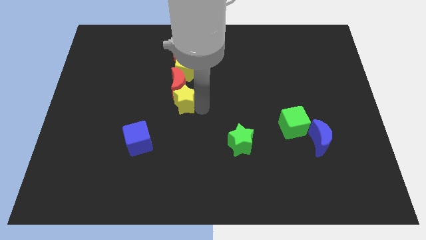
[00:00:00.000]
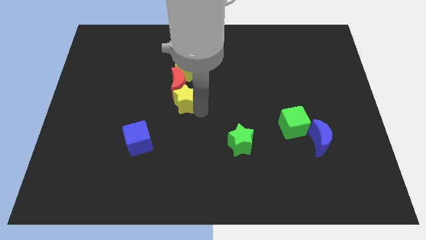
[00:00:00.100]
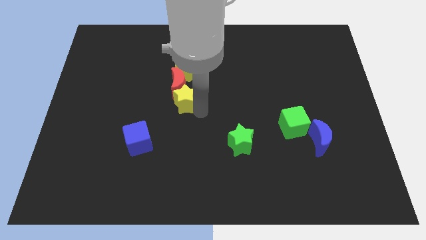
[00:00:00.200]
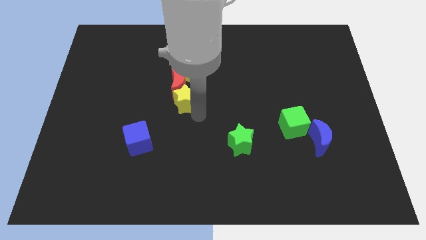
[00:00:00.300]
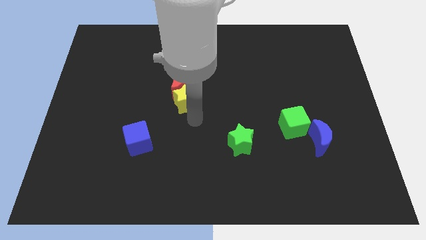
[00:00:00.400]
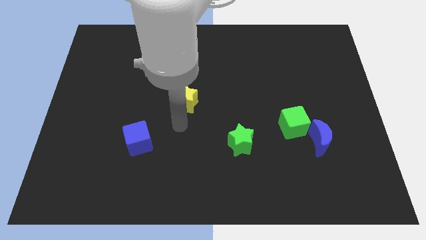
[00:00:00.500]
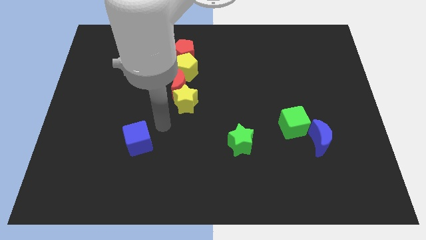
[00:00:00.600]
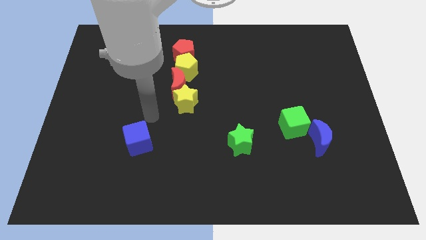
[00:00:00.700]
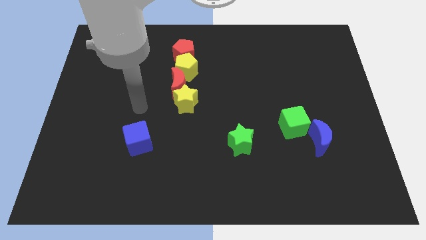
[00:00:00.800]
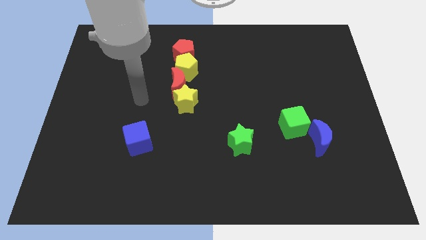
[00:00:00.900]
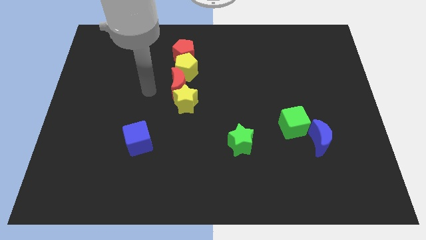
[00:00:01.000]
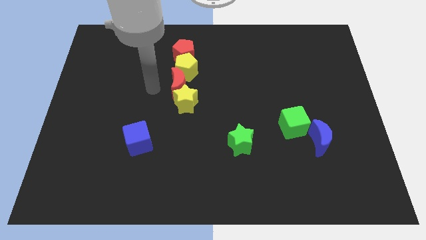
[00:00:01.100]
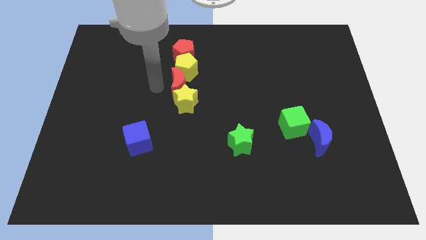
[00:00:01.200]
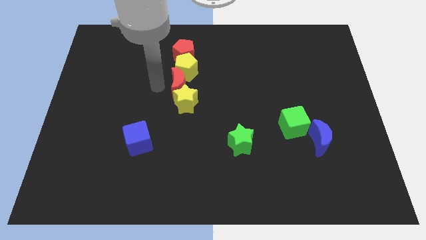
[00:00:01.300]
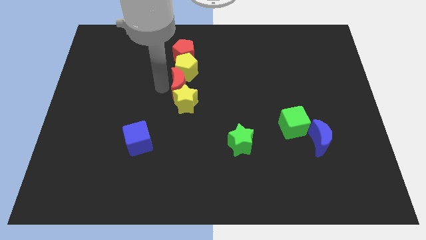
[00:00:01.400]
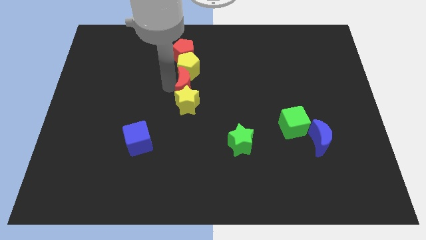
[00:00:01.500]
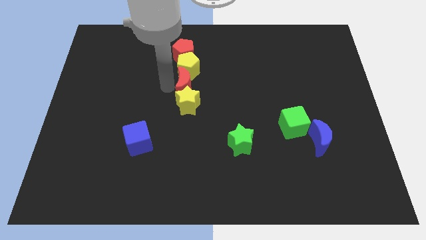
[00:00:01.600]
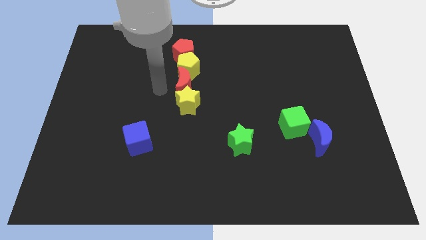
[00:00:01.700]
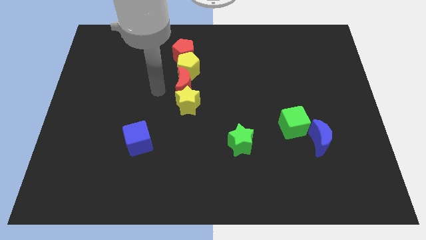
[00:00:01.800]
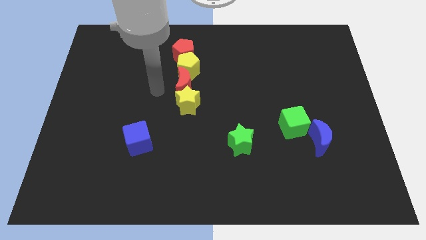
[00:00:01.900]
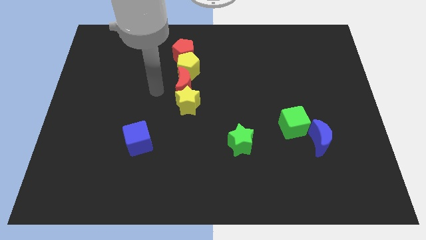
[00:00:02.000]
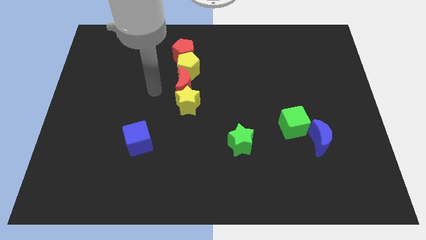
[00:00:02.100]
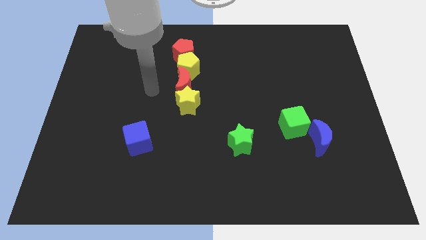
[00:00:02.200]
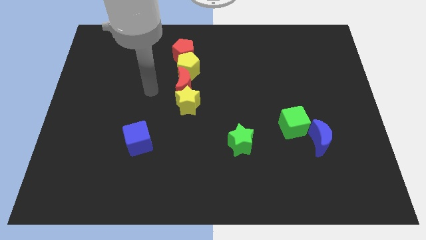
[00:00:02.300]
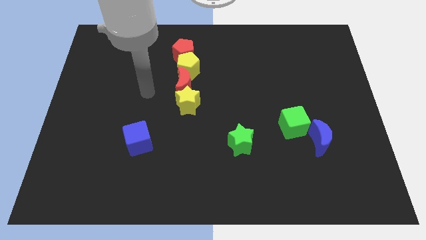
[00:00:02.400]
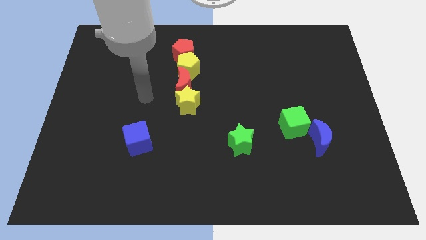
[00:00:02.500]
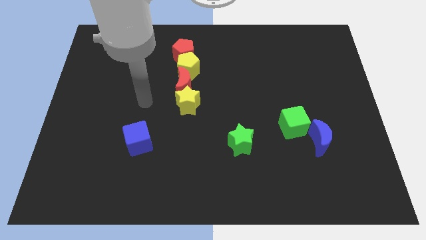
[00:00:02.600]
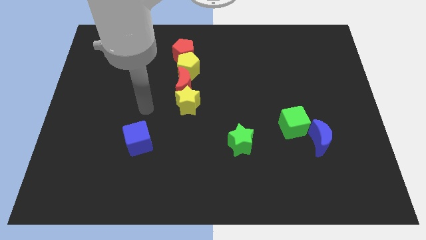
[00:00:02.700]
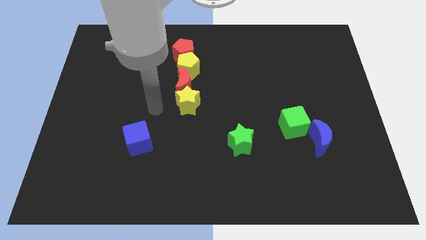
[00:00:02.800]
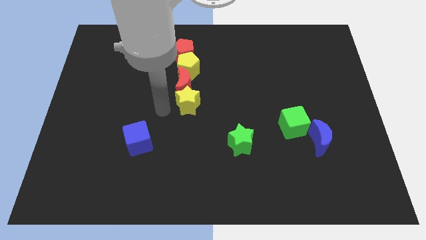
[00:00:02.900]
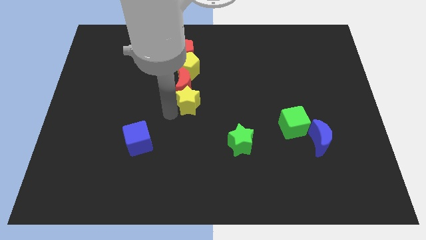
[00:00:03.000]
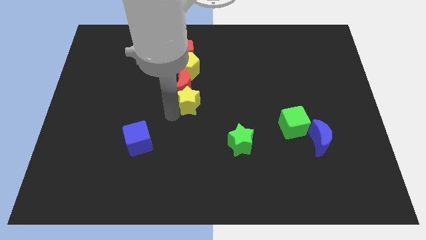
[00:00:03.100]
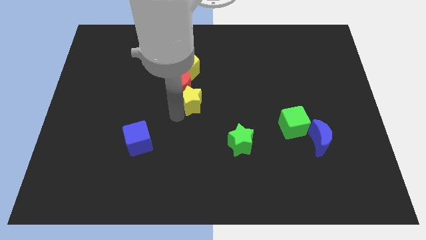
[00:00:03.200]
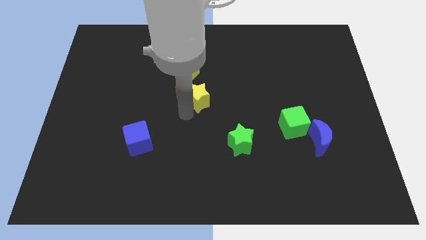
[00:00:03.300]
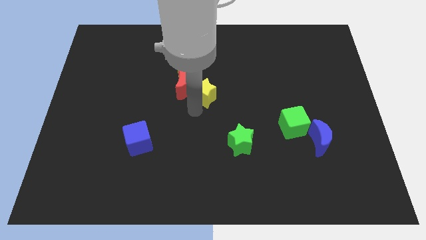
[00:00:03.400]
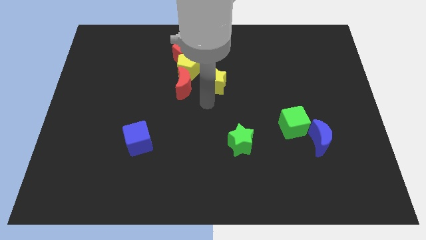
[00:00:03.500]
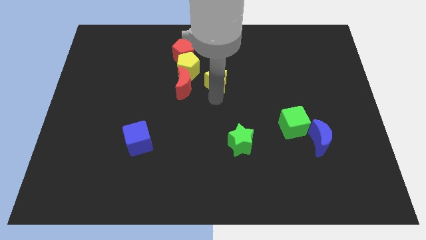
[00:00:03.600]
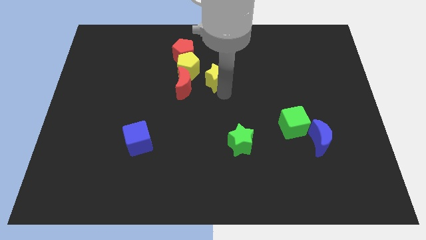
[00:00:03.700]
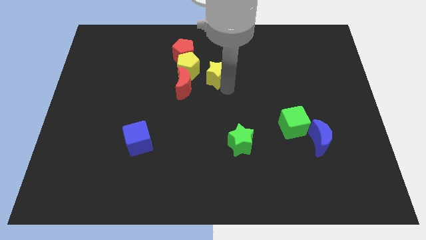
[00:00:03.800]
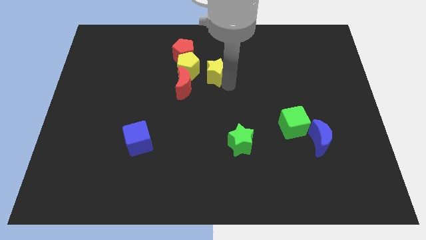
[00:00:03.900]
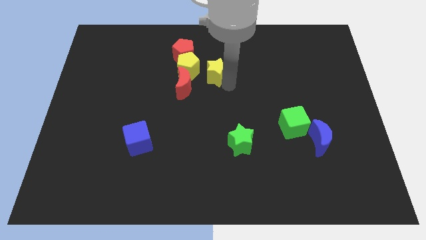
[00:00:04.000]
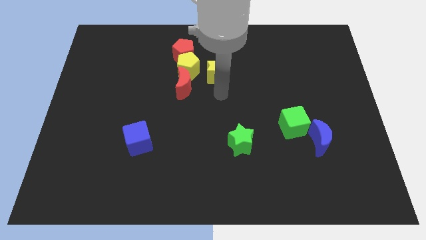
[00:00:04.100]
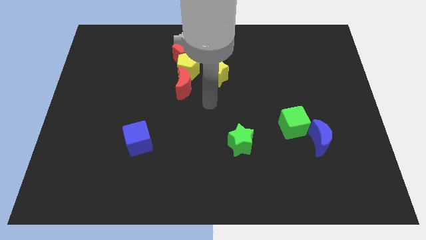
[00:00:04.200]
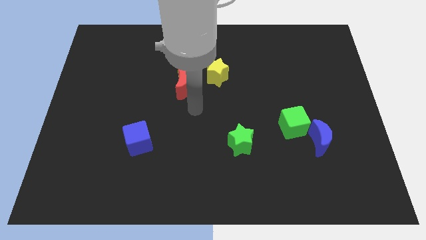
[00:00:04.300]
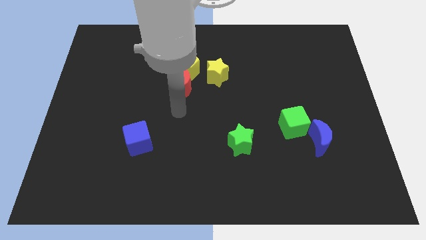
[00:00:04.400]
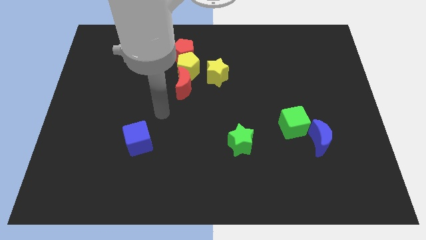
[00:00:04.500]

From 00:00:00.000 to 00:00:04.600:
place the yellow star right to the yellow pentagon

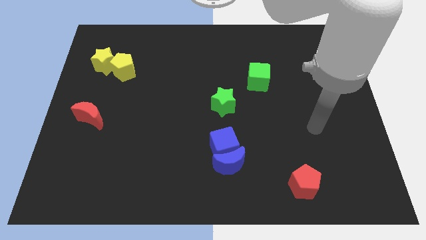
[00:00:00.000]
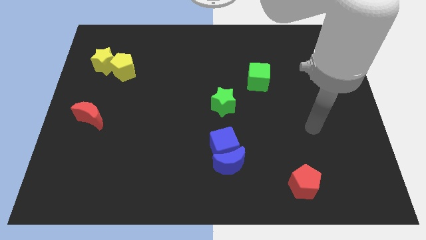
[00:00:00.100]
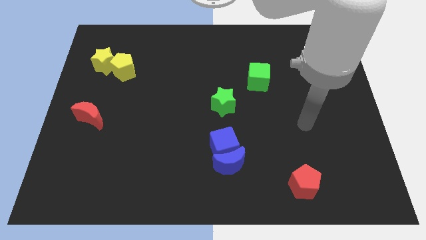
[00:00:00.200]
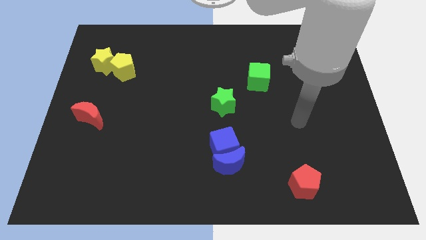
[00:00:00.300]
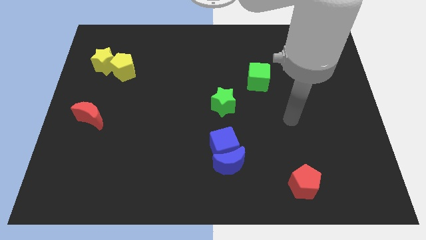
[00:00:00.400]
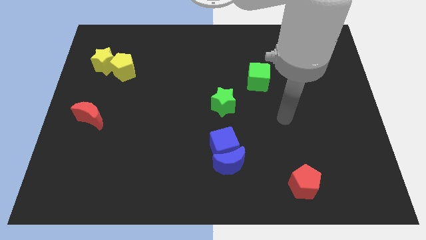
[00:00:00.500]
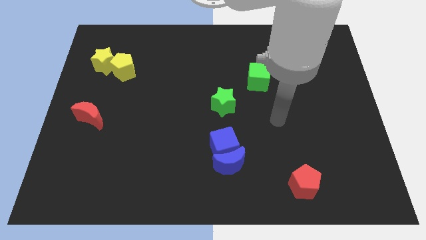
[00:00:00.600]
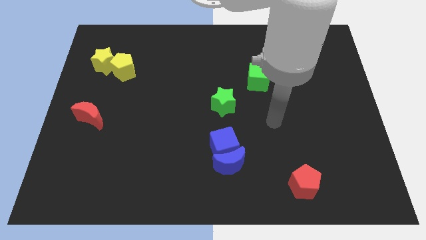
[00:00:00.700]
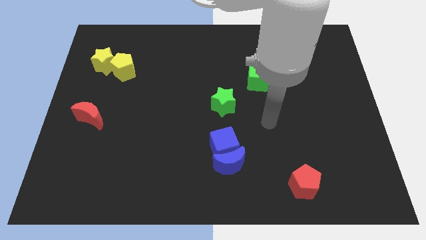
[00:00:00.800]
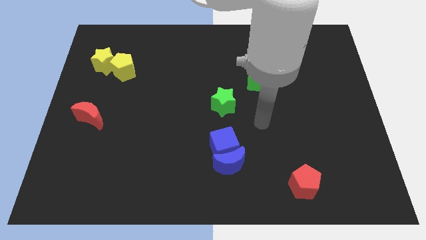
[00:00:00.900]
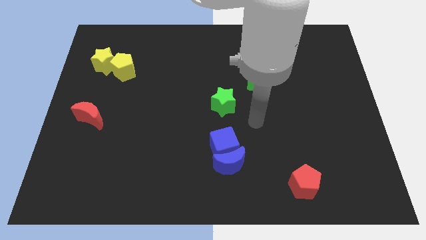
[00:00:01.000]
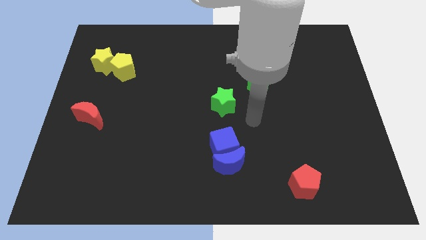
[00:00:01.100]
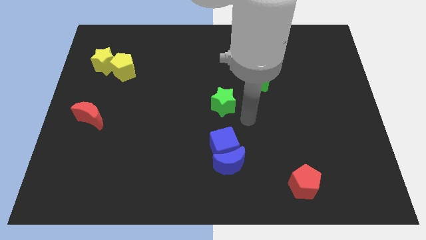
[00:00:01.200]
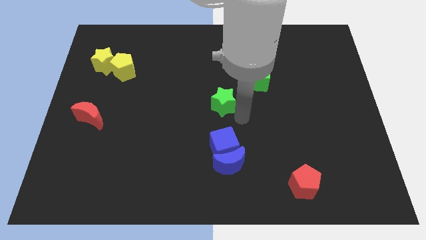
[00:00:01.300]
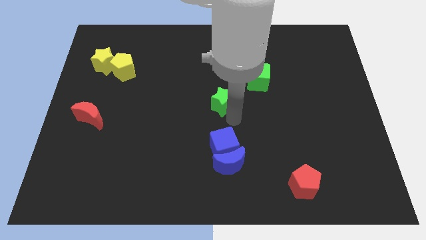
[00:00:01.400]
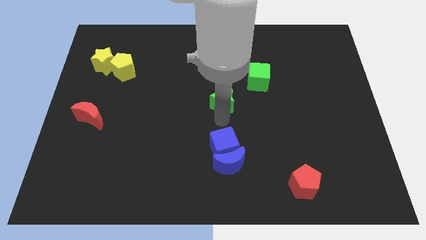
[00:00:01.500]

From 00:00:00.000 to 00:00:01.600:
point the arm in between the green star and the blue cube

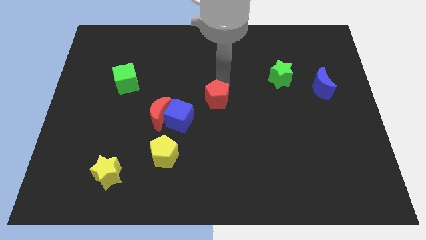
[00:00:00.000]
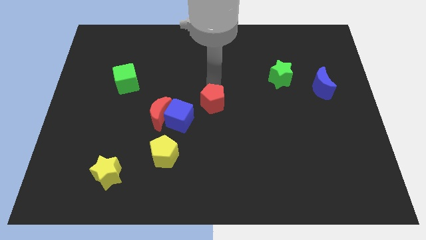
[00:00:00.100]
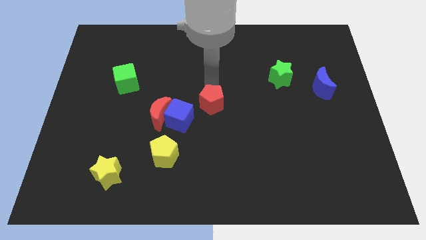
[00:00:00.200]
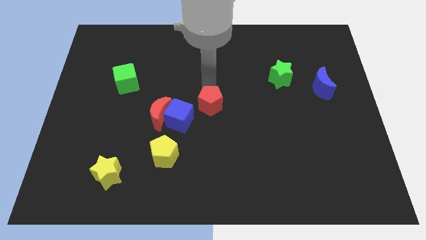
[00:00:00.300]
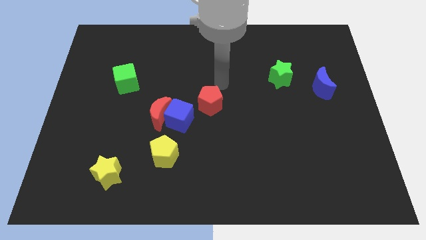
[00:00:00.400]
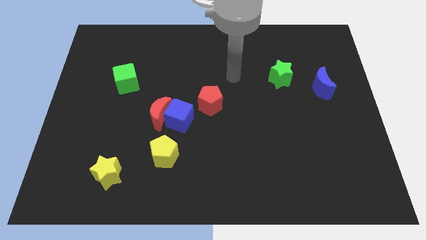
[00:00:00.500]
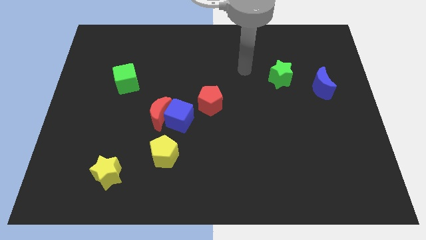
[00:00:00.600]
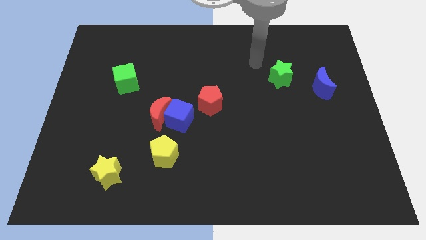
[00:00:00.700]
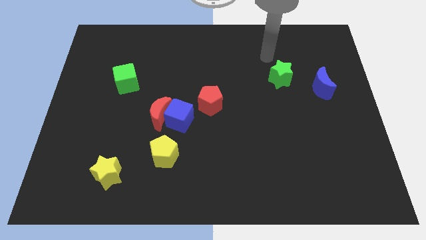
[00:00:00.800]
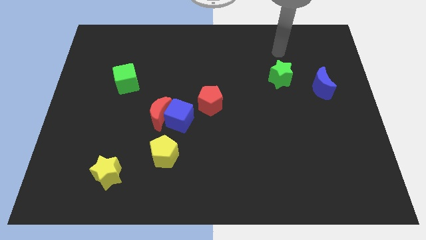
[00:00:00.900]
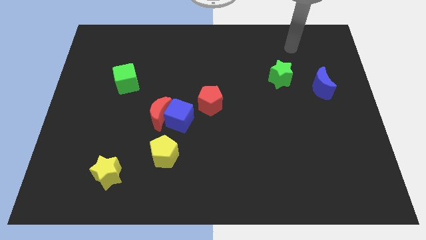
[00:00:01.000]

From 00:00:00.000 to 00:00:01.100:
place the red pentagon diagonally top right to the blue cube

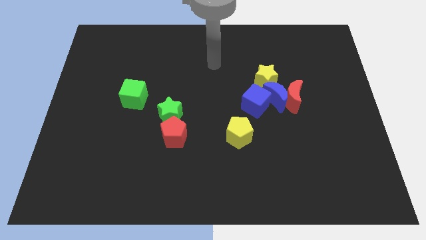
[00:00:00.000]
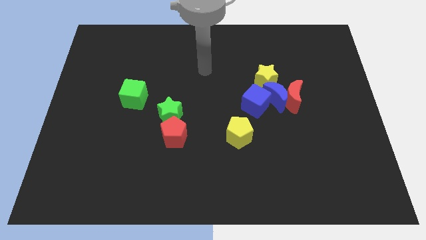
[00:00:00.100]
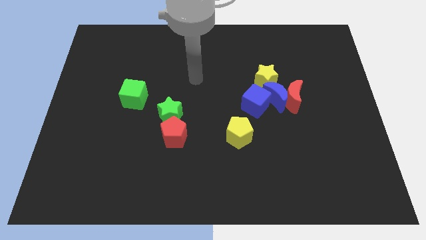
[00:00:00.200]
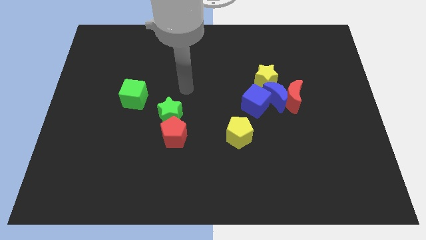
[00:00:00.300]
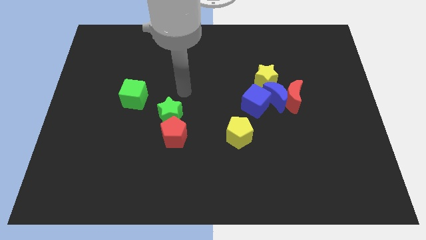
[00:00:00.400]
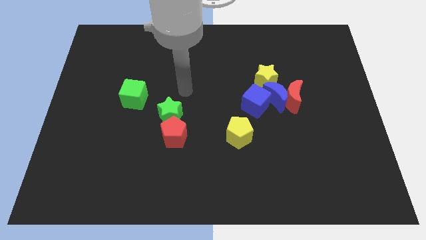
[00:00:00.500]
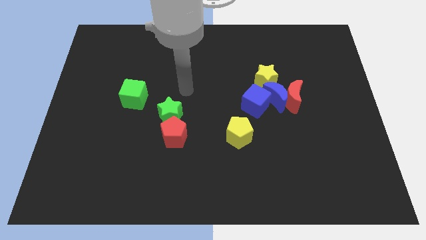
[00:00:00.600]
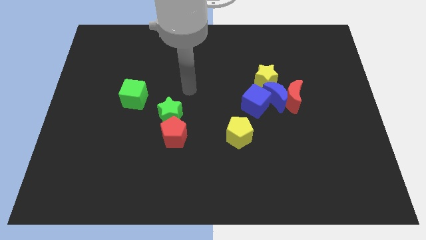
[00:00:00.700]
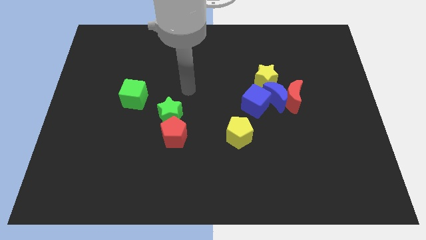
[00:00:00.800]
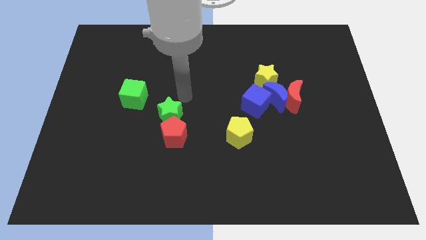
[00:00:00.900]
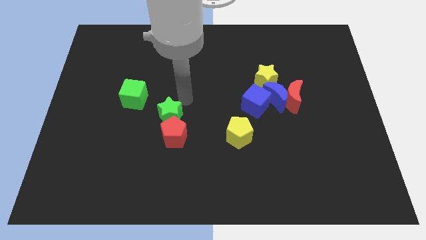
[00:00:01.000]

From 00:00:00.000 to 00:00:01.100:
move your arm to the right of the green cube

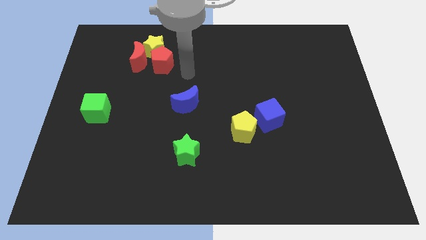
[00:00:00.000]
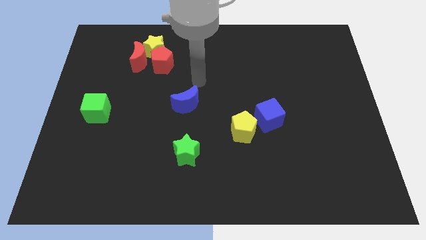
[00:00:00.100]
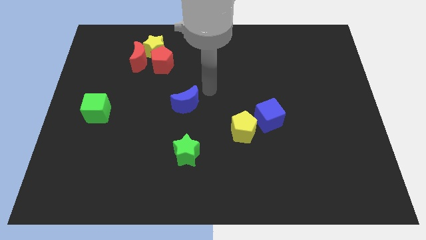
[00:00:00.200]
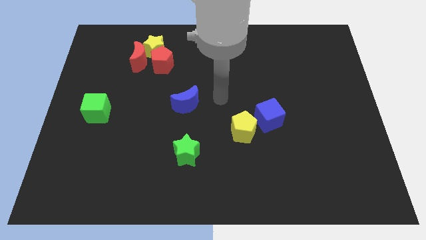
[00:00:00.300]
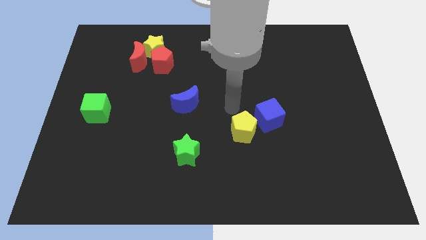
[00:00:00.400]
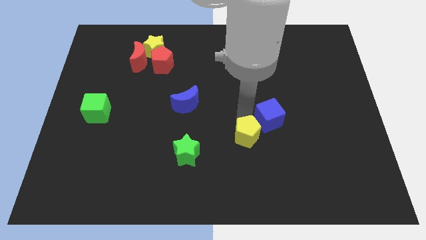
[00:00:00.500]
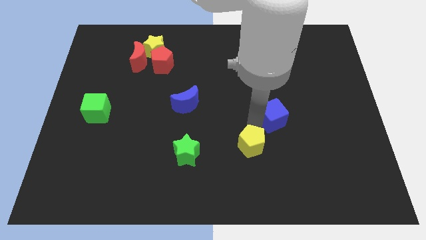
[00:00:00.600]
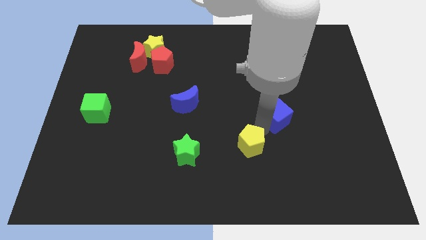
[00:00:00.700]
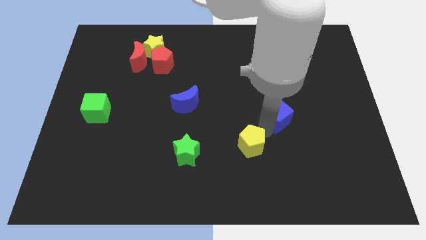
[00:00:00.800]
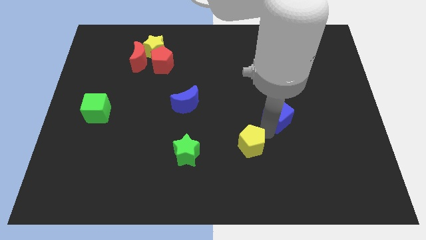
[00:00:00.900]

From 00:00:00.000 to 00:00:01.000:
separate yellow pentagon from blue cube
